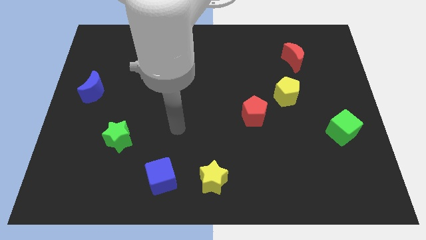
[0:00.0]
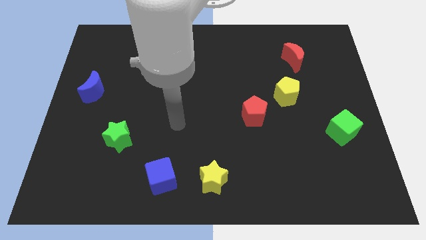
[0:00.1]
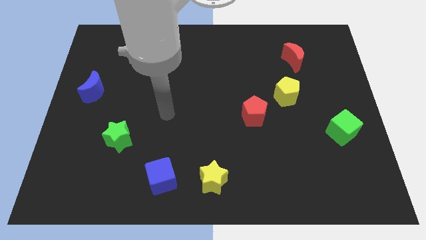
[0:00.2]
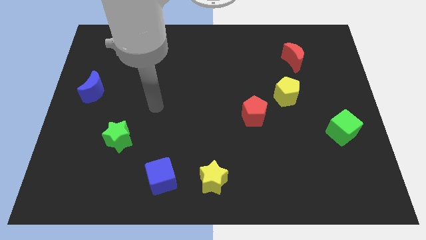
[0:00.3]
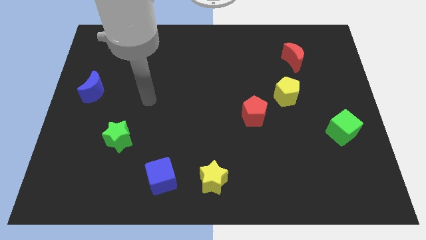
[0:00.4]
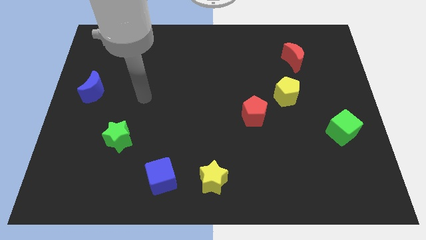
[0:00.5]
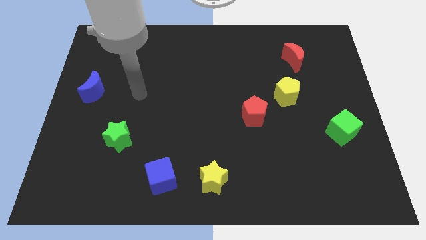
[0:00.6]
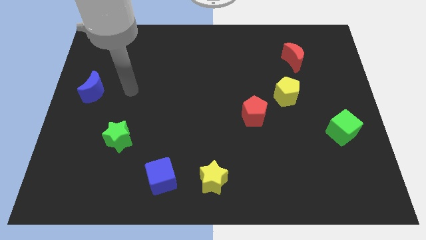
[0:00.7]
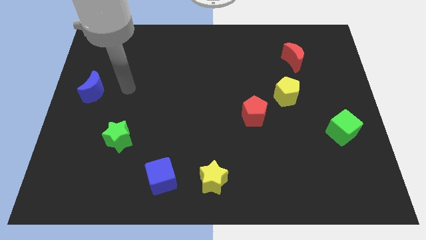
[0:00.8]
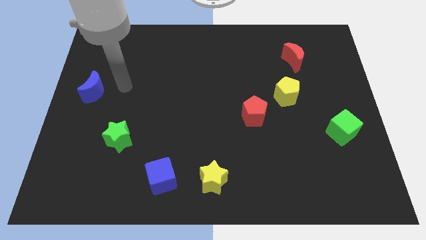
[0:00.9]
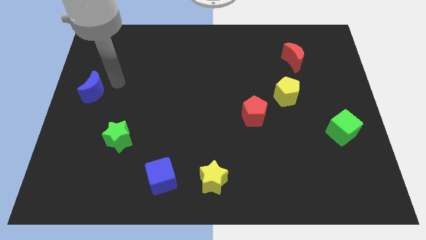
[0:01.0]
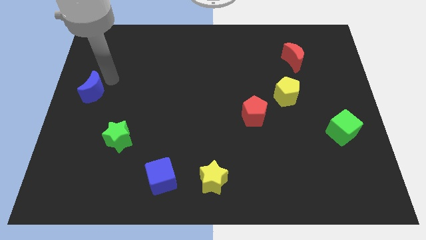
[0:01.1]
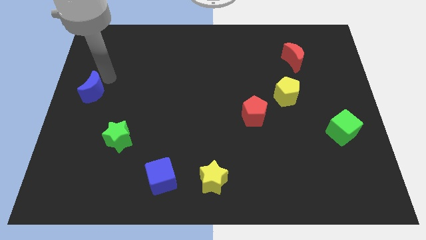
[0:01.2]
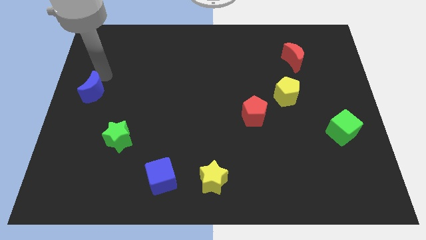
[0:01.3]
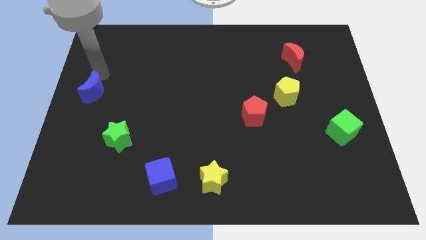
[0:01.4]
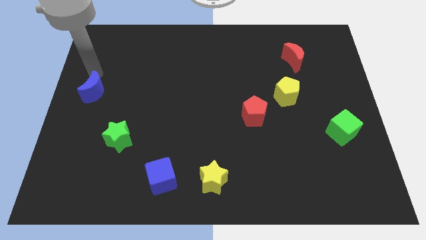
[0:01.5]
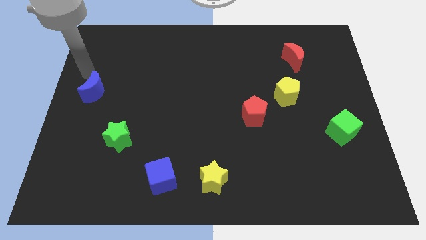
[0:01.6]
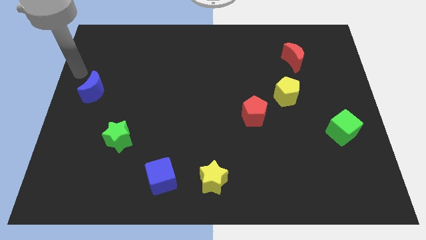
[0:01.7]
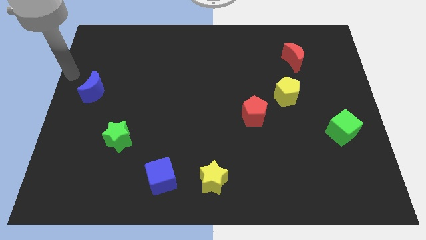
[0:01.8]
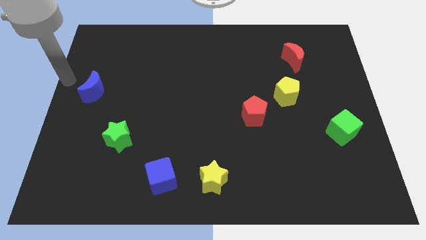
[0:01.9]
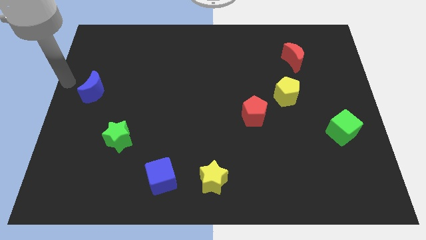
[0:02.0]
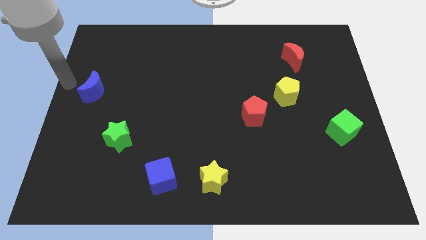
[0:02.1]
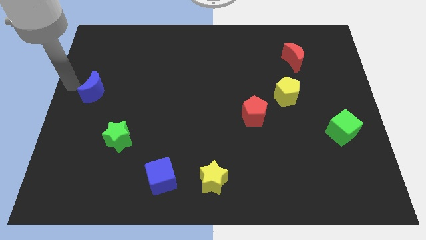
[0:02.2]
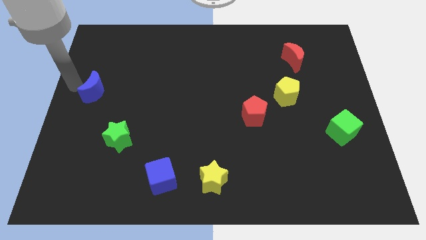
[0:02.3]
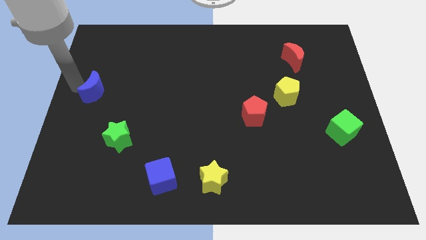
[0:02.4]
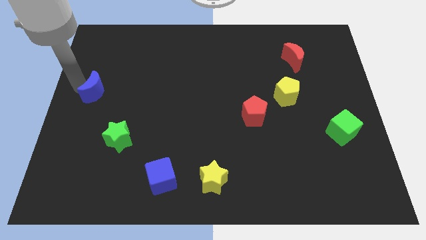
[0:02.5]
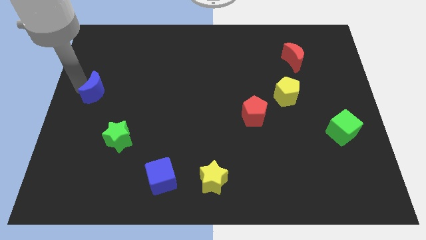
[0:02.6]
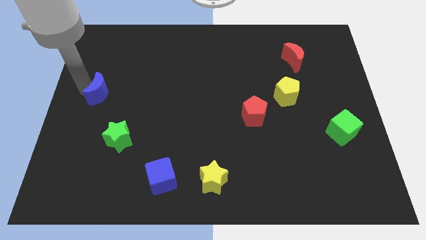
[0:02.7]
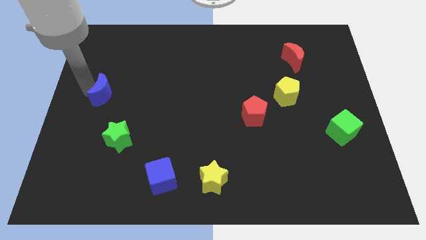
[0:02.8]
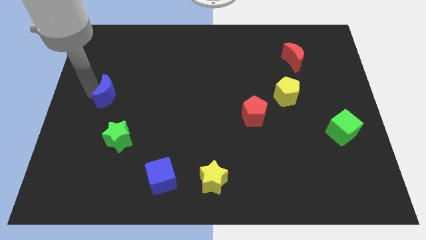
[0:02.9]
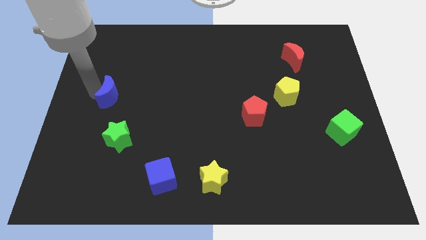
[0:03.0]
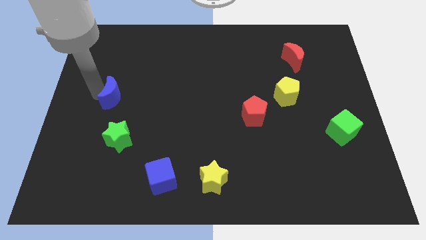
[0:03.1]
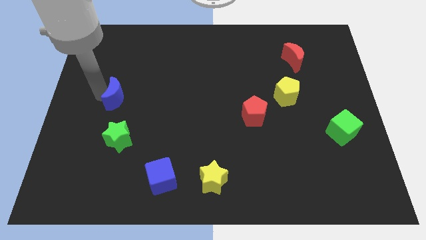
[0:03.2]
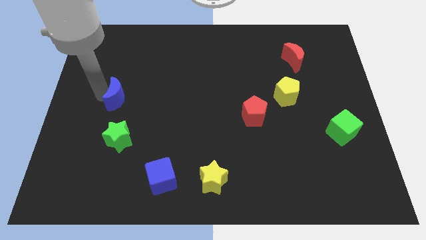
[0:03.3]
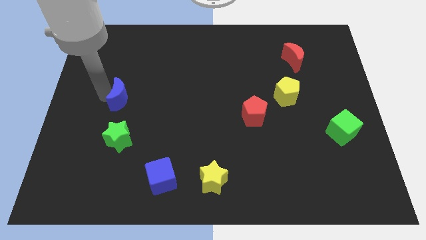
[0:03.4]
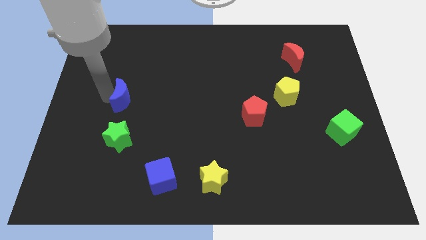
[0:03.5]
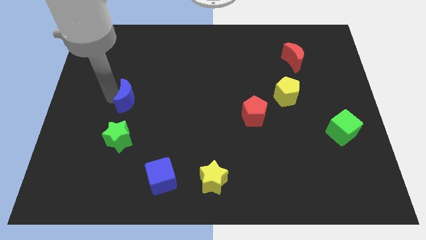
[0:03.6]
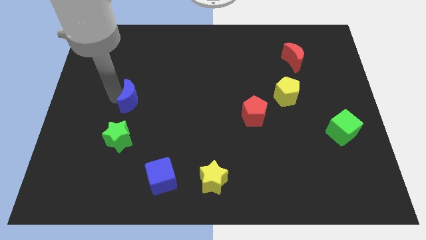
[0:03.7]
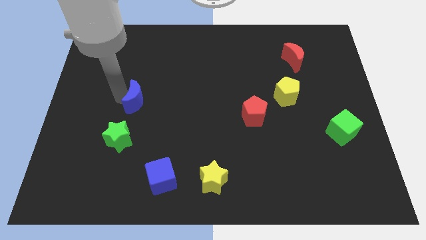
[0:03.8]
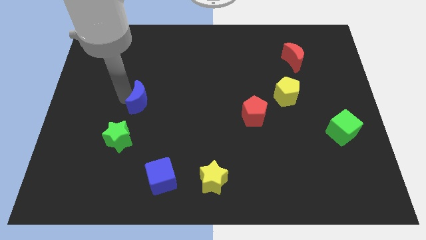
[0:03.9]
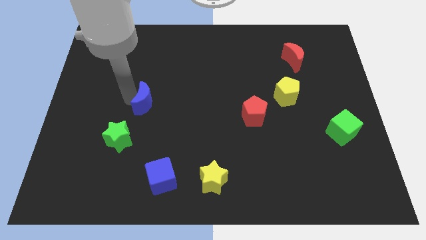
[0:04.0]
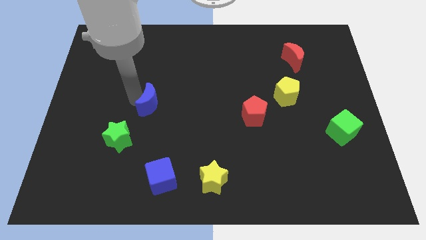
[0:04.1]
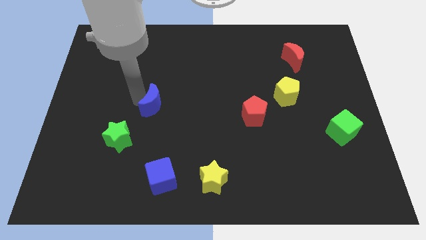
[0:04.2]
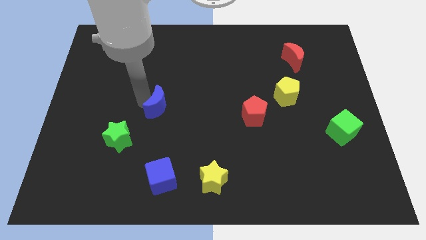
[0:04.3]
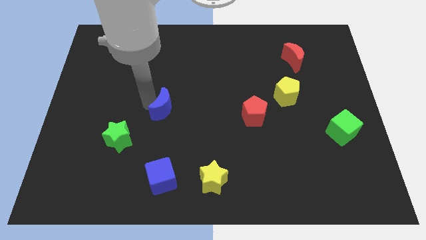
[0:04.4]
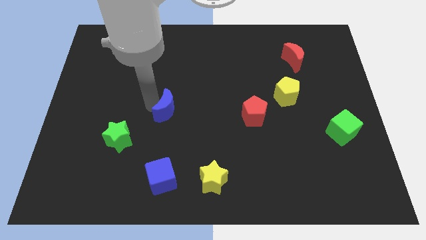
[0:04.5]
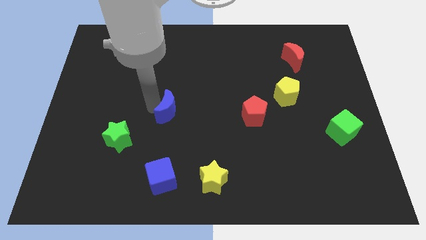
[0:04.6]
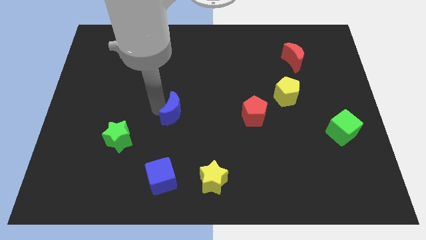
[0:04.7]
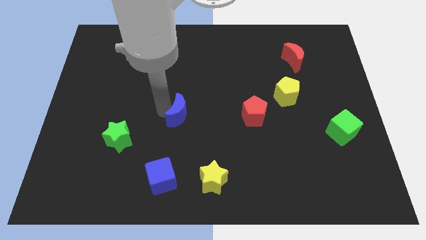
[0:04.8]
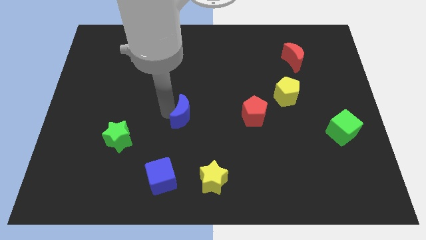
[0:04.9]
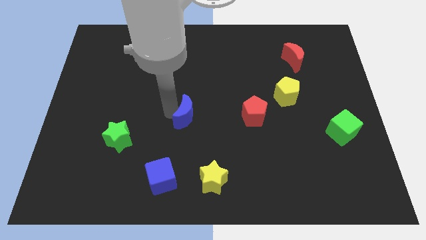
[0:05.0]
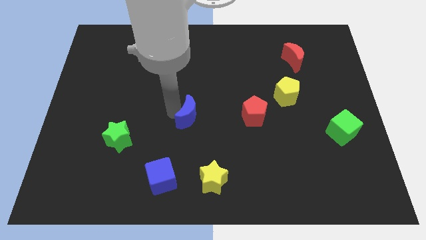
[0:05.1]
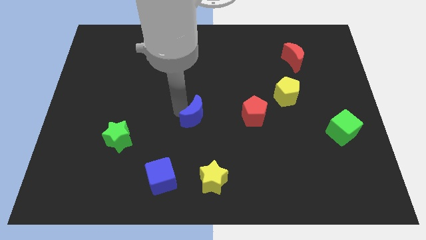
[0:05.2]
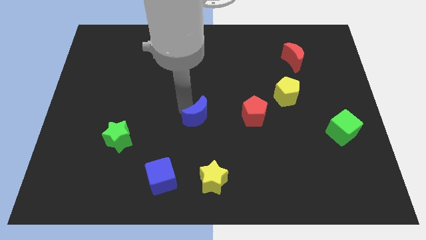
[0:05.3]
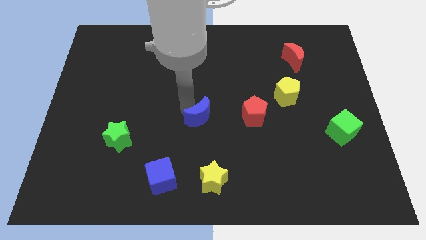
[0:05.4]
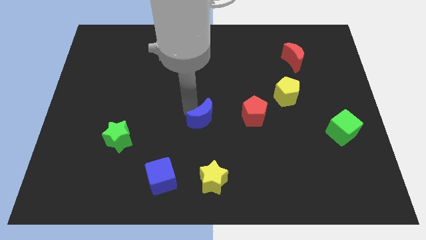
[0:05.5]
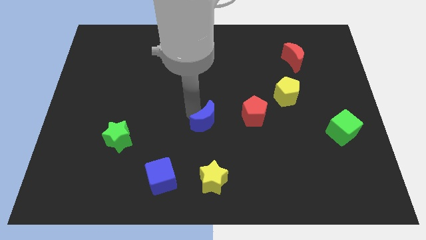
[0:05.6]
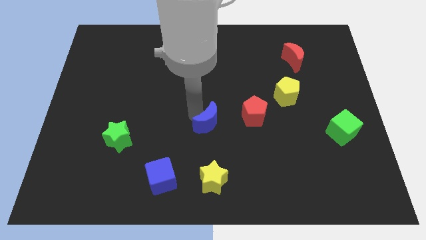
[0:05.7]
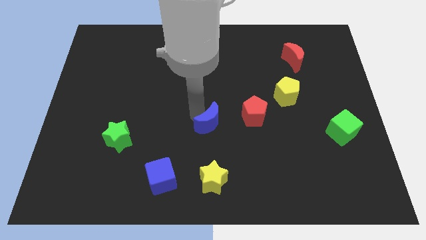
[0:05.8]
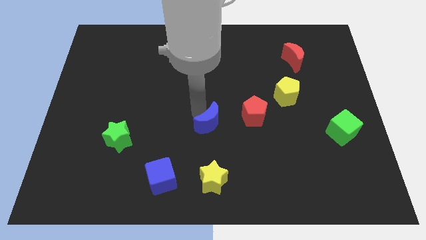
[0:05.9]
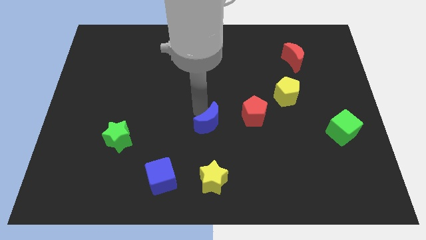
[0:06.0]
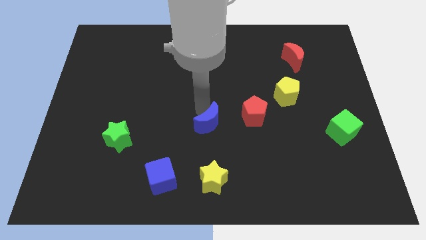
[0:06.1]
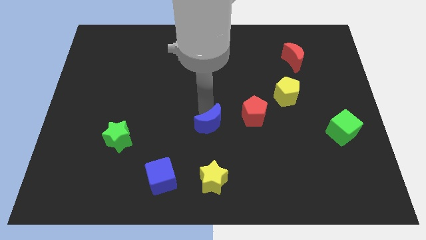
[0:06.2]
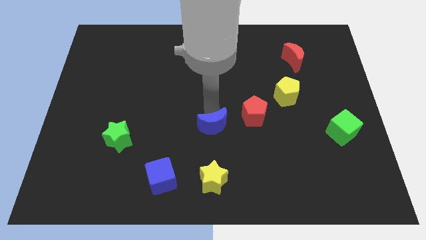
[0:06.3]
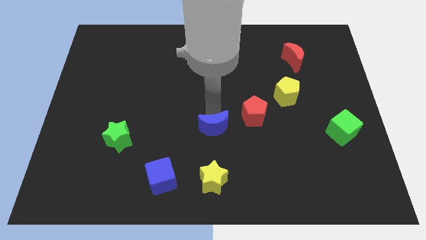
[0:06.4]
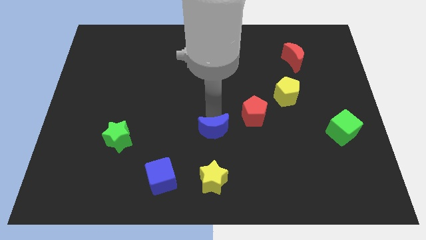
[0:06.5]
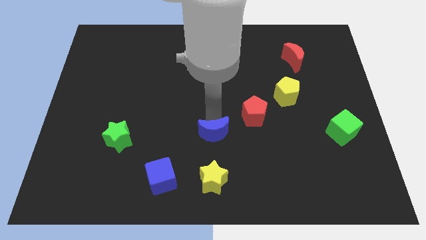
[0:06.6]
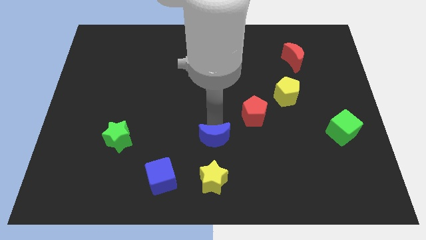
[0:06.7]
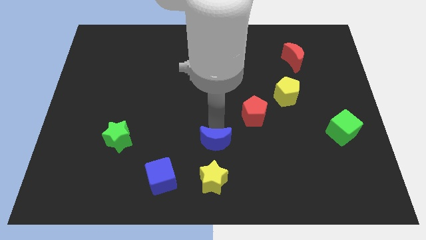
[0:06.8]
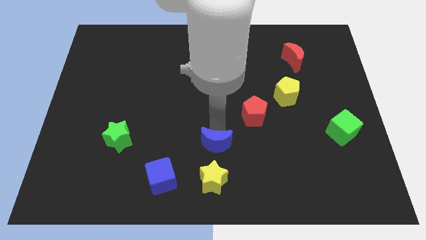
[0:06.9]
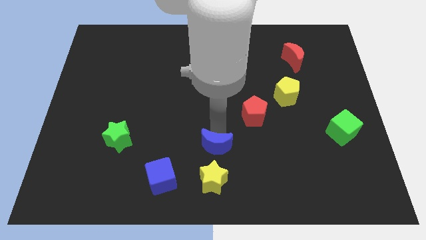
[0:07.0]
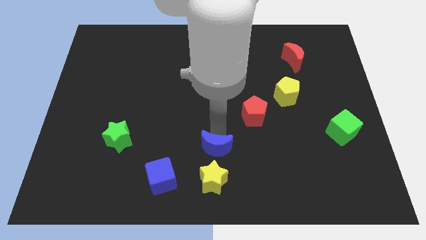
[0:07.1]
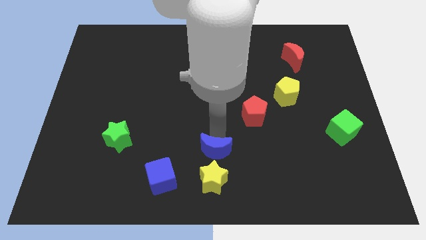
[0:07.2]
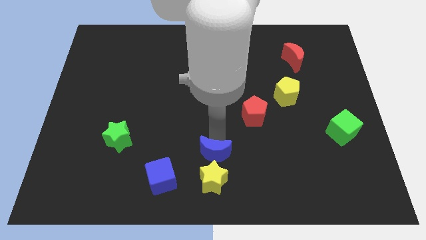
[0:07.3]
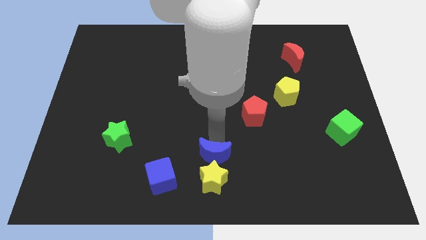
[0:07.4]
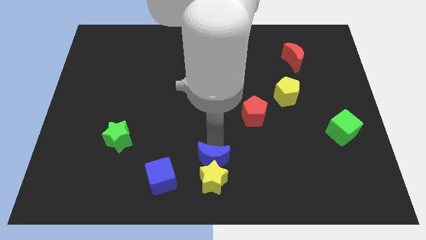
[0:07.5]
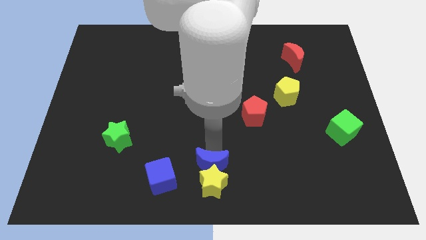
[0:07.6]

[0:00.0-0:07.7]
put the blue moon next to the yellow star

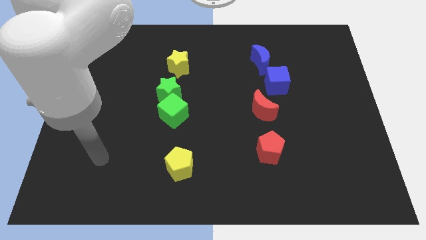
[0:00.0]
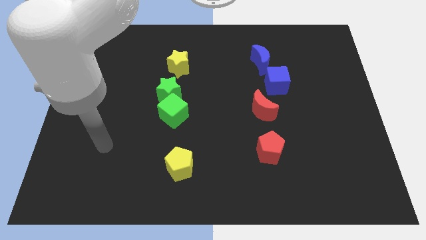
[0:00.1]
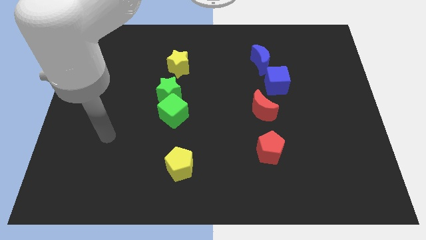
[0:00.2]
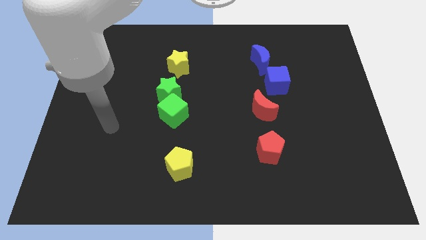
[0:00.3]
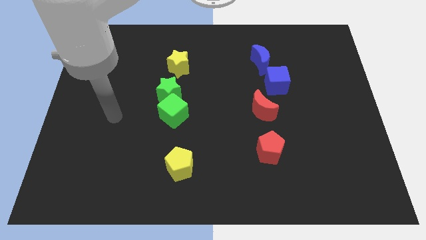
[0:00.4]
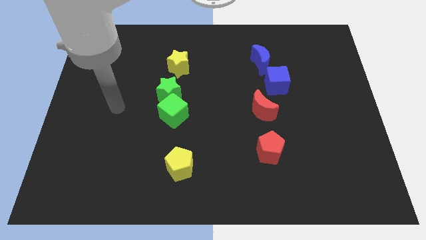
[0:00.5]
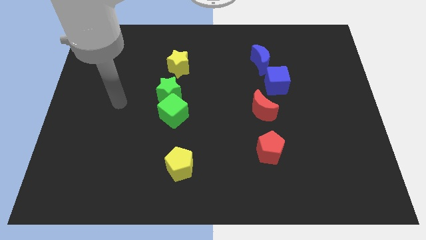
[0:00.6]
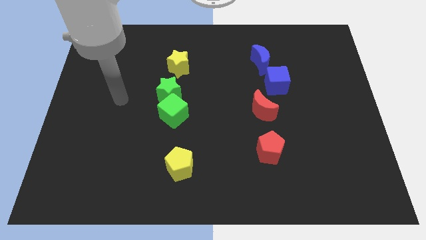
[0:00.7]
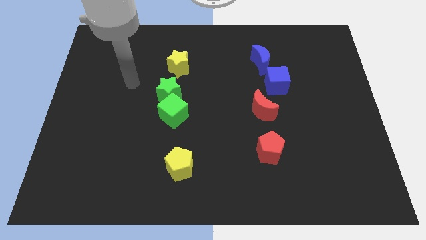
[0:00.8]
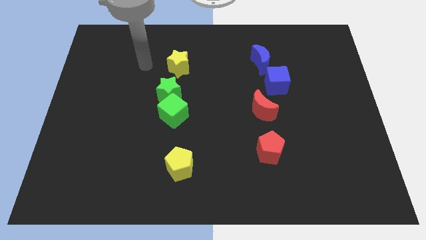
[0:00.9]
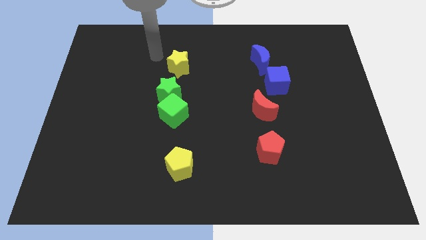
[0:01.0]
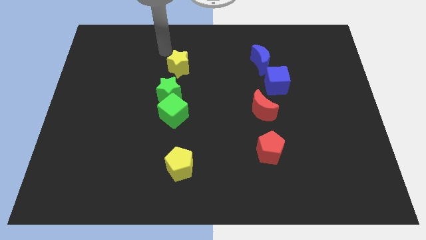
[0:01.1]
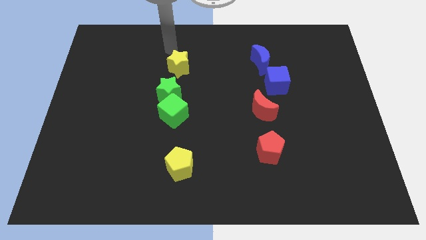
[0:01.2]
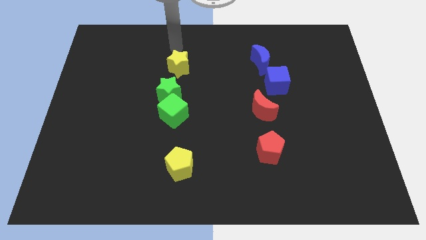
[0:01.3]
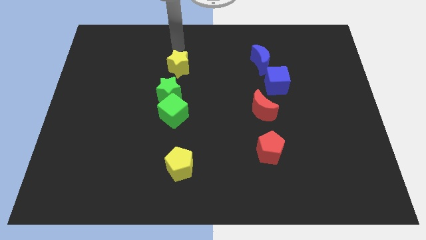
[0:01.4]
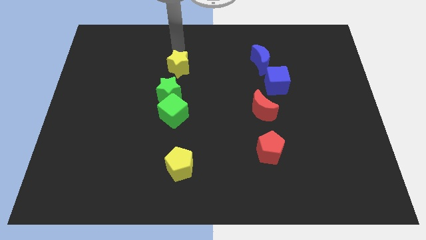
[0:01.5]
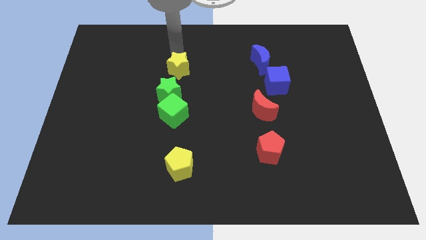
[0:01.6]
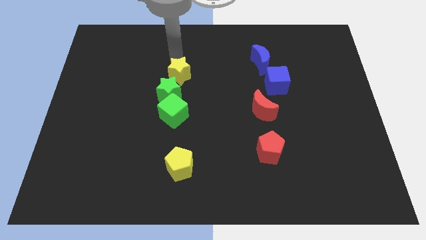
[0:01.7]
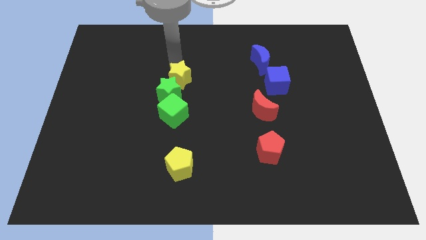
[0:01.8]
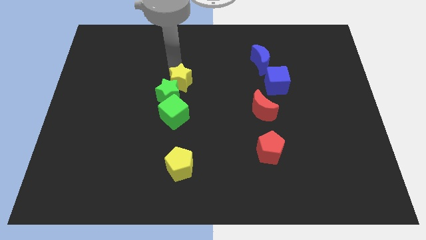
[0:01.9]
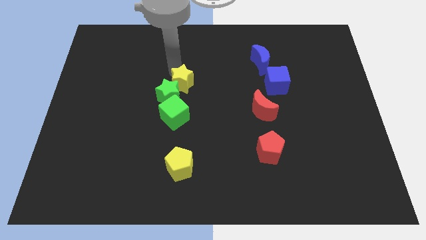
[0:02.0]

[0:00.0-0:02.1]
slide the yellow star to the green star
